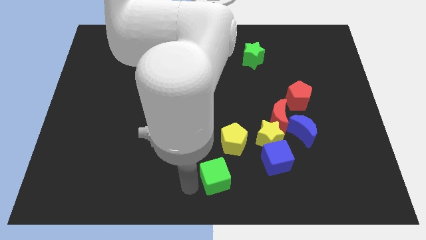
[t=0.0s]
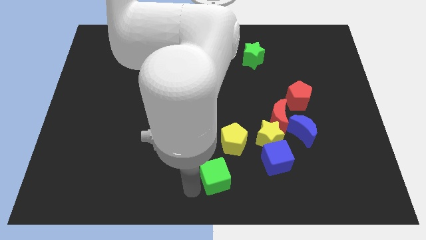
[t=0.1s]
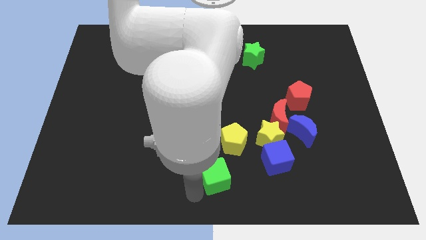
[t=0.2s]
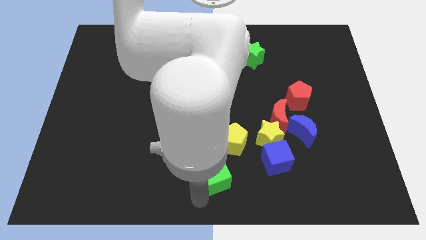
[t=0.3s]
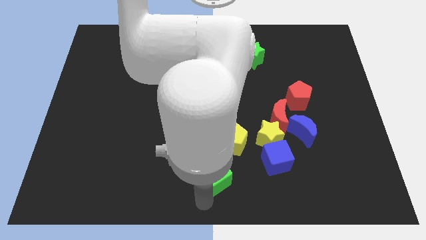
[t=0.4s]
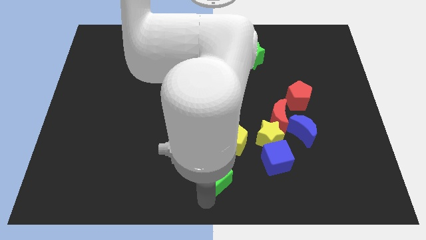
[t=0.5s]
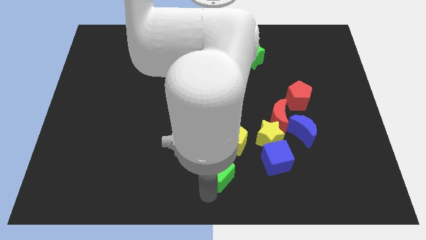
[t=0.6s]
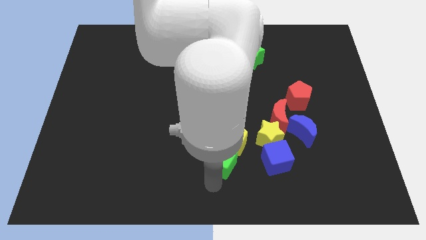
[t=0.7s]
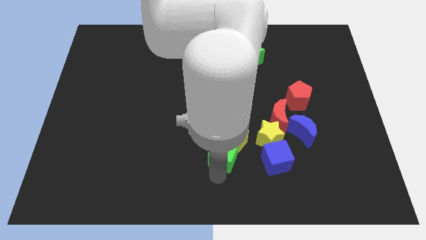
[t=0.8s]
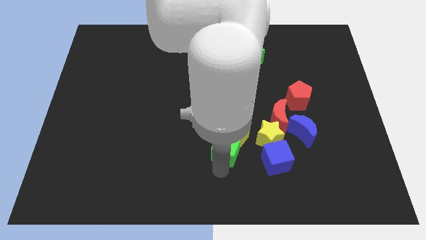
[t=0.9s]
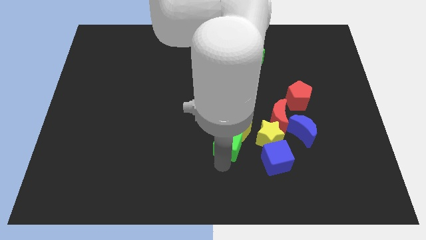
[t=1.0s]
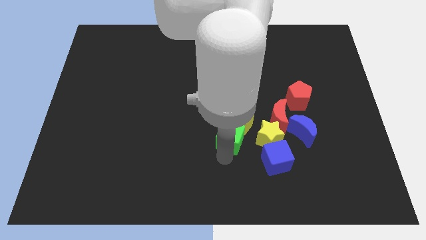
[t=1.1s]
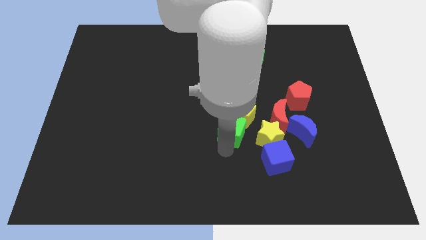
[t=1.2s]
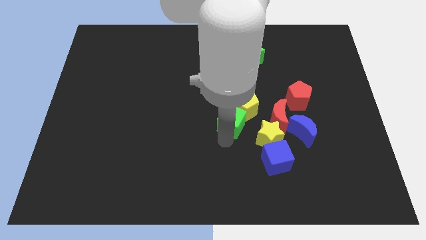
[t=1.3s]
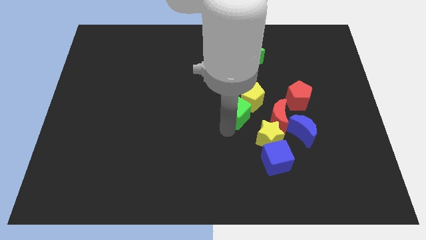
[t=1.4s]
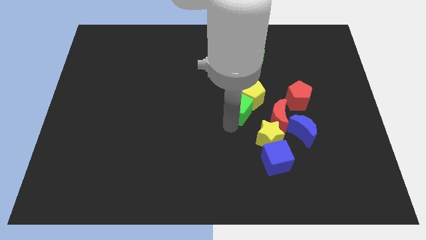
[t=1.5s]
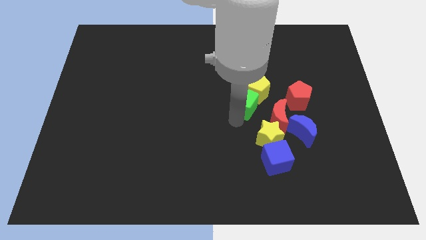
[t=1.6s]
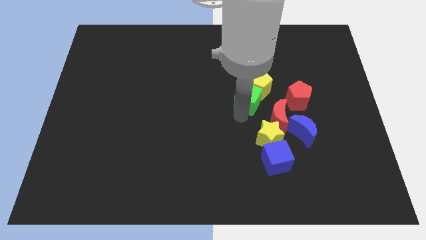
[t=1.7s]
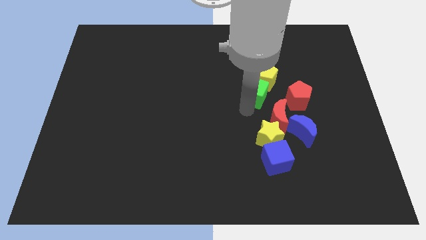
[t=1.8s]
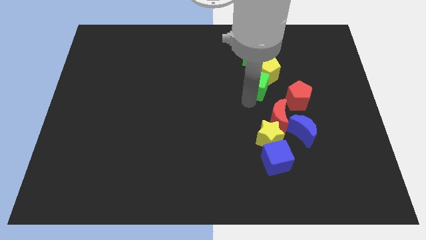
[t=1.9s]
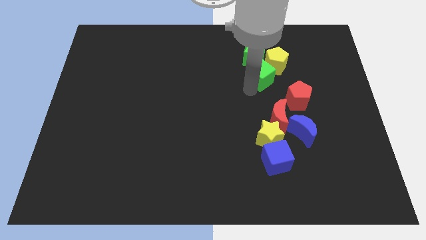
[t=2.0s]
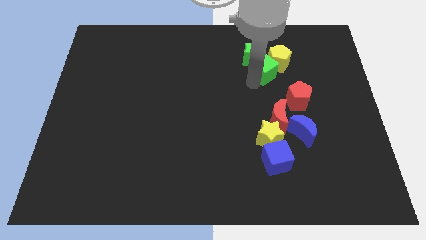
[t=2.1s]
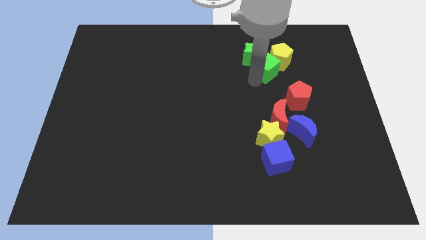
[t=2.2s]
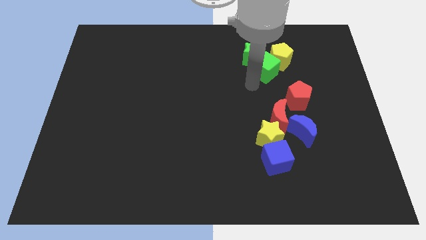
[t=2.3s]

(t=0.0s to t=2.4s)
push the yellow pentagon and green cube towards the green star

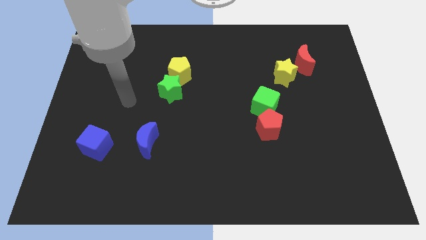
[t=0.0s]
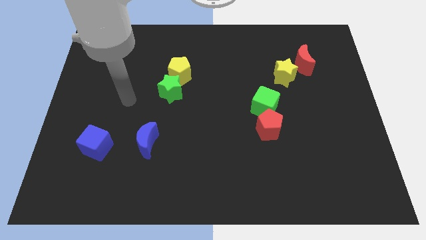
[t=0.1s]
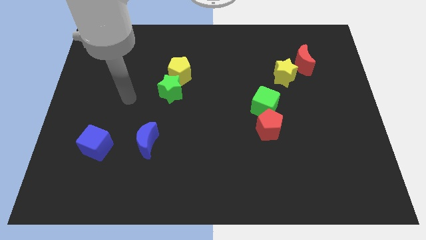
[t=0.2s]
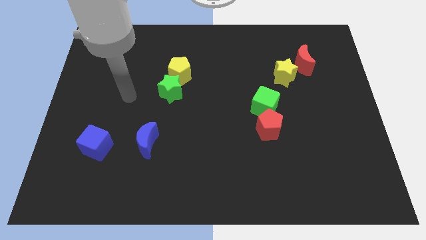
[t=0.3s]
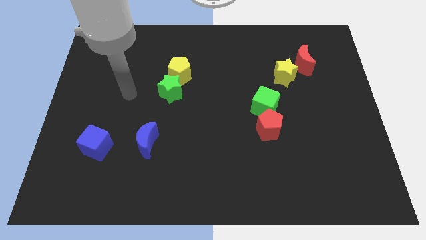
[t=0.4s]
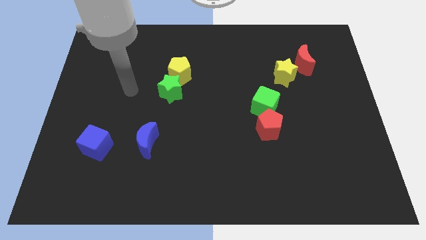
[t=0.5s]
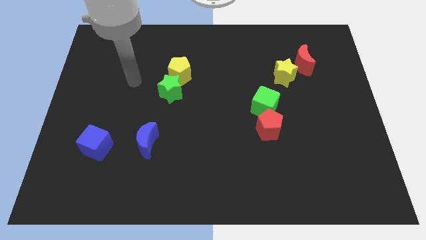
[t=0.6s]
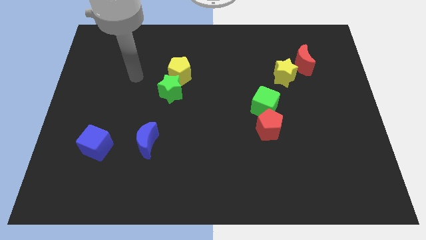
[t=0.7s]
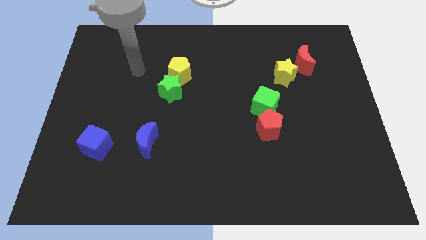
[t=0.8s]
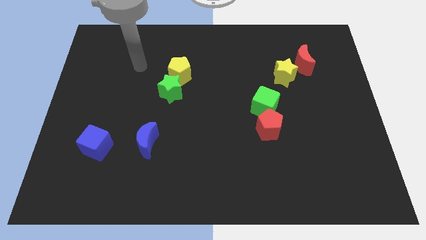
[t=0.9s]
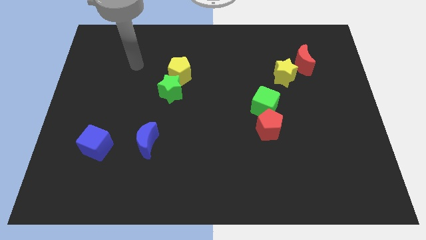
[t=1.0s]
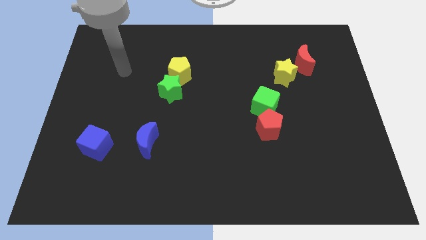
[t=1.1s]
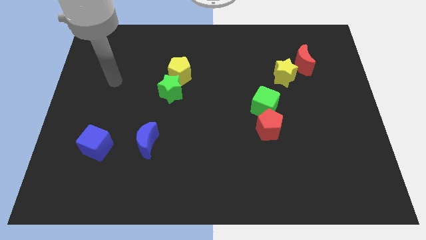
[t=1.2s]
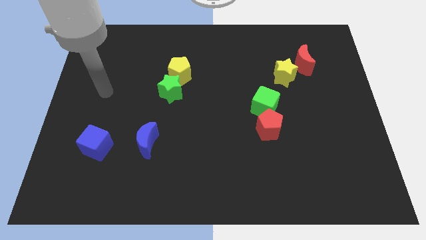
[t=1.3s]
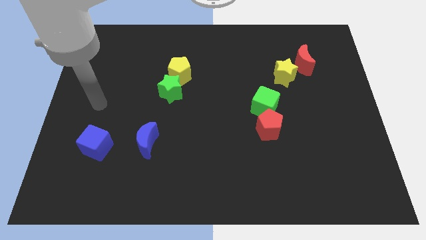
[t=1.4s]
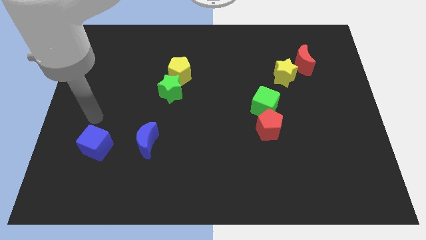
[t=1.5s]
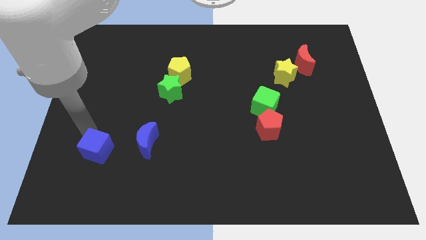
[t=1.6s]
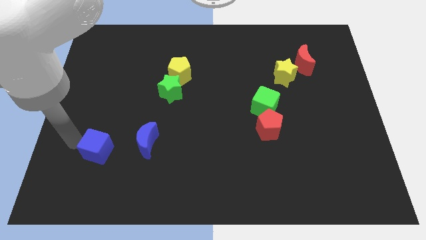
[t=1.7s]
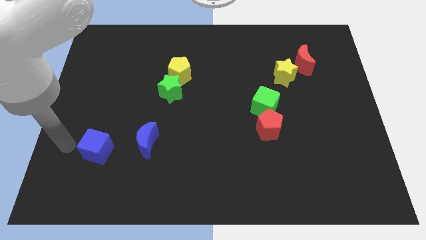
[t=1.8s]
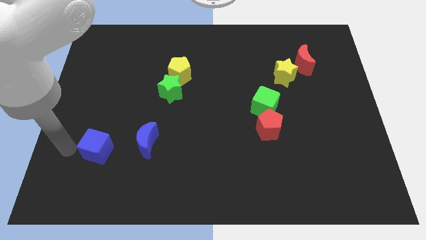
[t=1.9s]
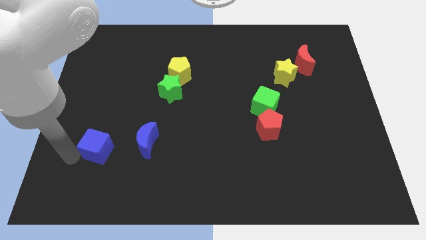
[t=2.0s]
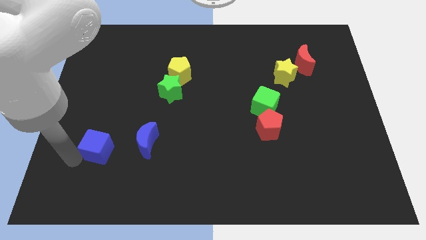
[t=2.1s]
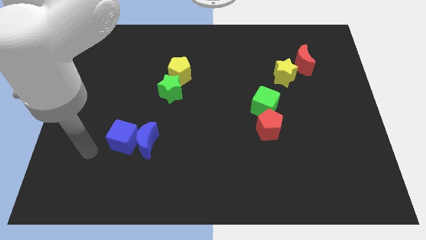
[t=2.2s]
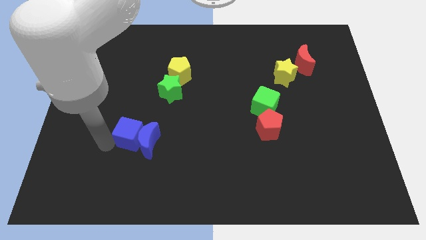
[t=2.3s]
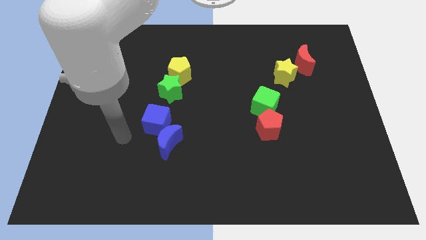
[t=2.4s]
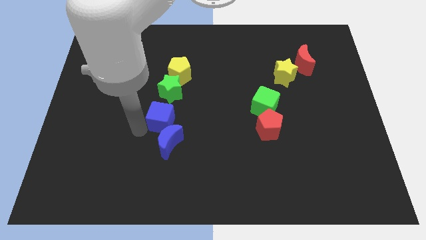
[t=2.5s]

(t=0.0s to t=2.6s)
push the blue square into blue crescent

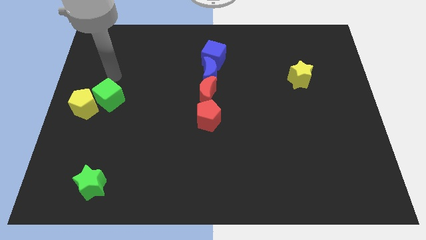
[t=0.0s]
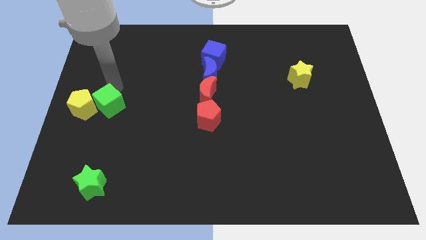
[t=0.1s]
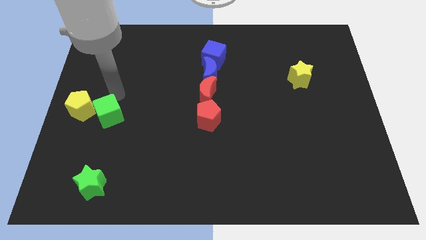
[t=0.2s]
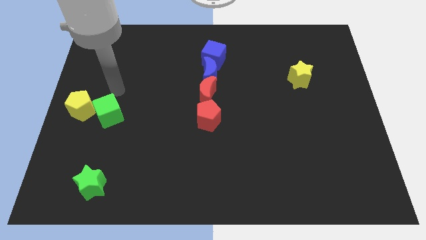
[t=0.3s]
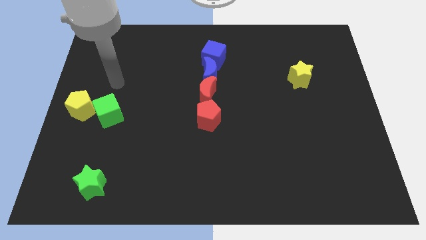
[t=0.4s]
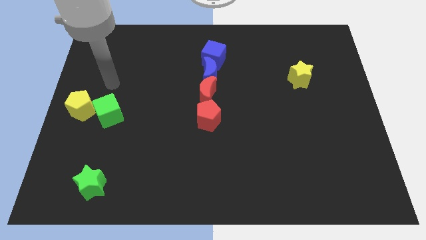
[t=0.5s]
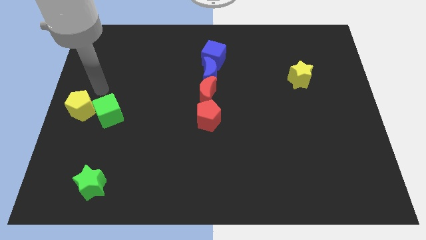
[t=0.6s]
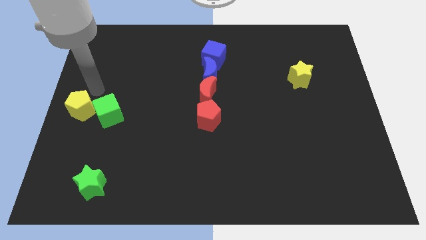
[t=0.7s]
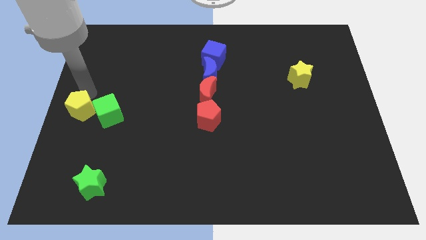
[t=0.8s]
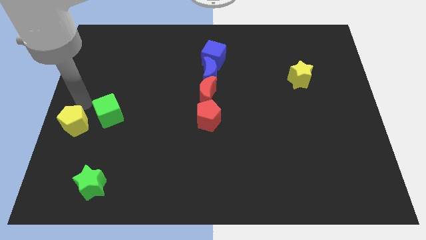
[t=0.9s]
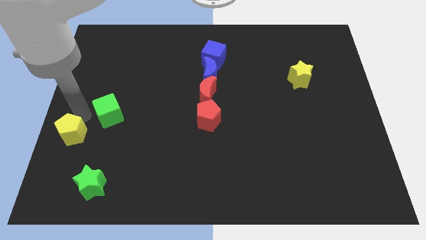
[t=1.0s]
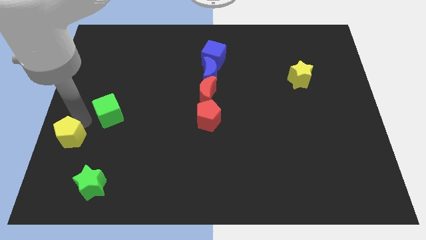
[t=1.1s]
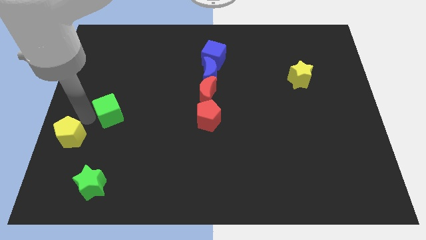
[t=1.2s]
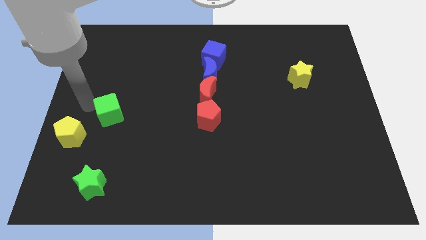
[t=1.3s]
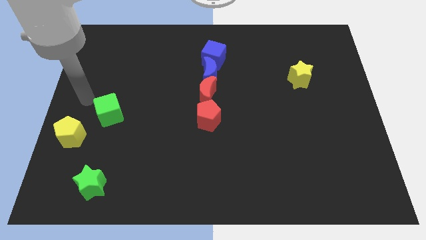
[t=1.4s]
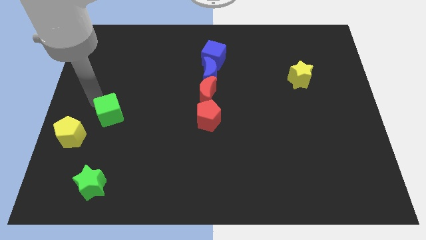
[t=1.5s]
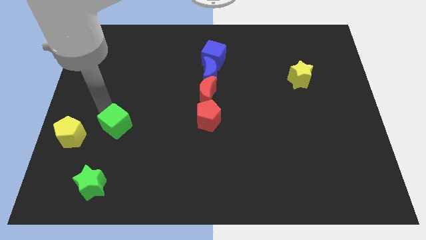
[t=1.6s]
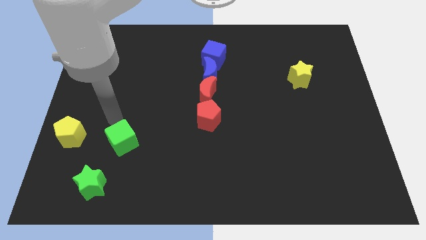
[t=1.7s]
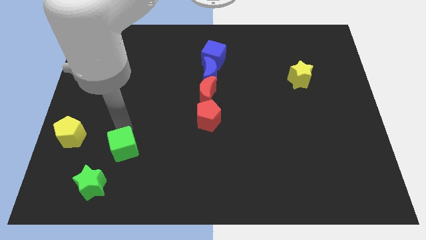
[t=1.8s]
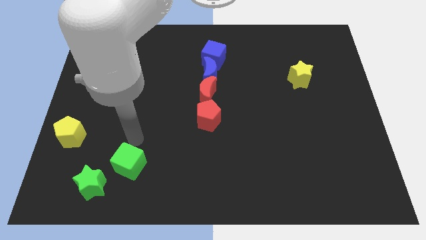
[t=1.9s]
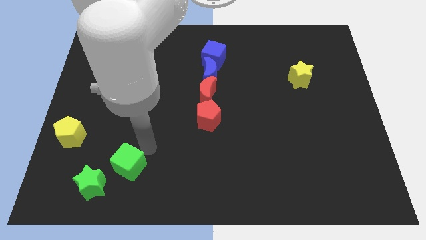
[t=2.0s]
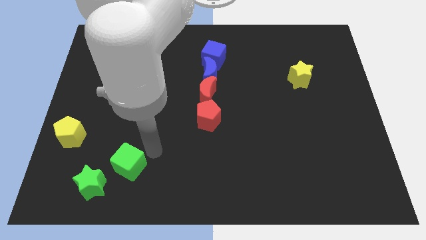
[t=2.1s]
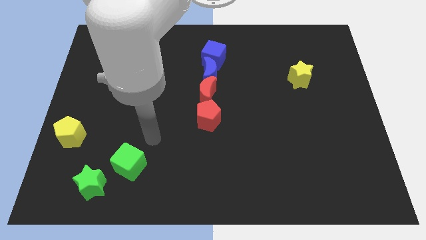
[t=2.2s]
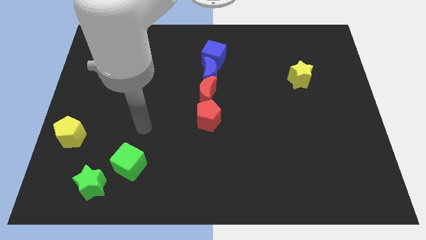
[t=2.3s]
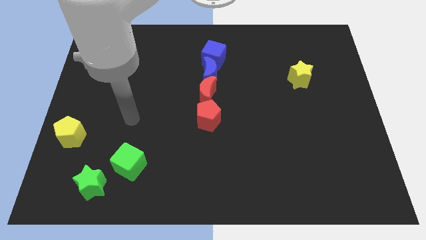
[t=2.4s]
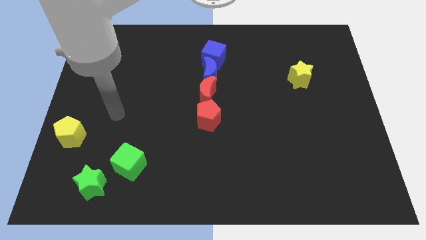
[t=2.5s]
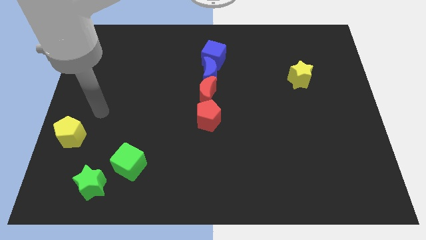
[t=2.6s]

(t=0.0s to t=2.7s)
push green cube towards green star

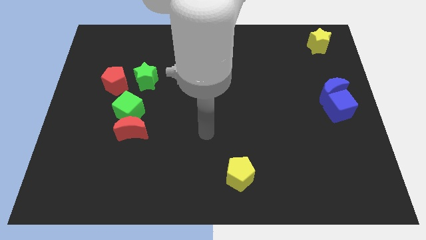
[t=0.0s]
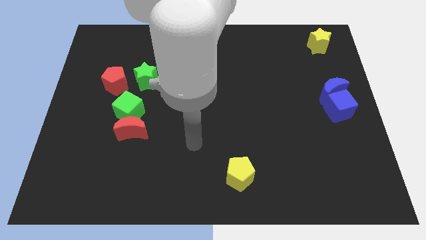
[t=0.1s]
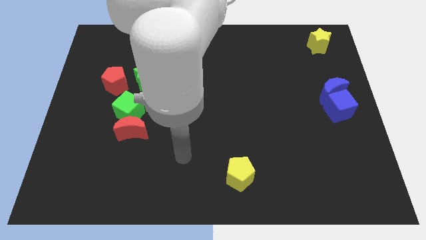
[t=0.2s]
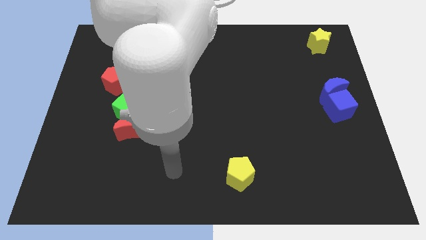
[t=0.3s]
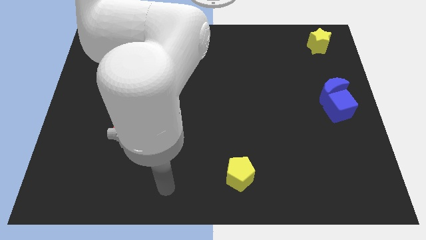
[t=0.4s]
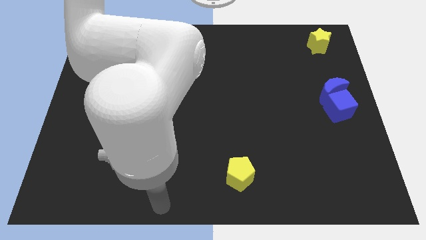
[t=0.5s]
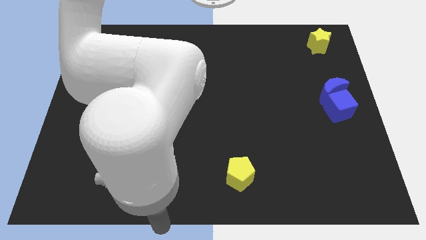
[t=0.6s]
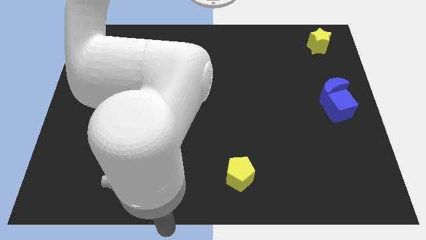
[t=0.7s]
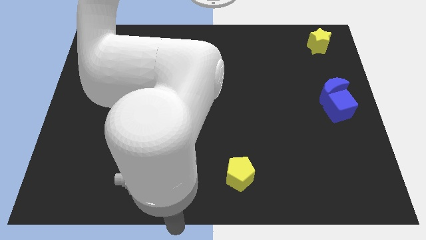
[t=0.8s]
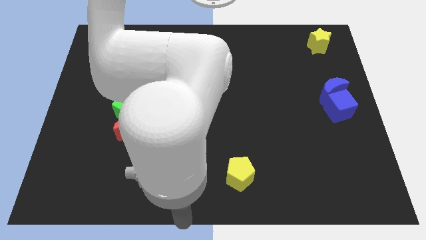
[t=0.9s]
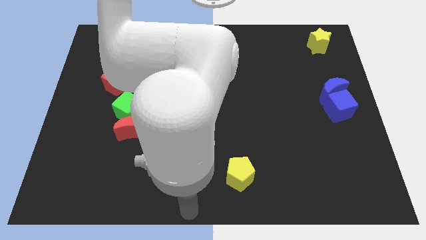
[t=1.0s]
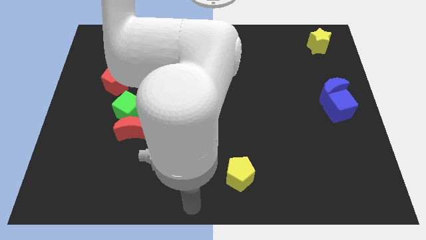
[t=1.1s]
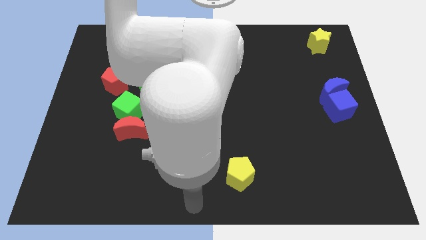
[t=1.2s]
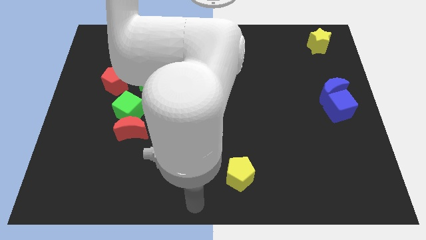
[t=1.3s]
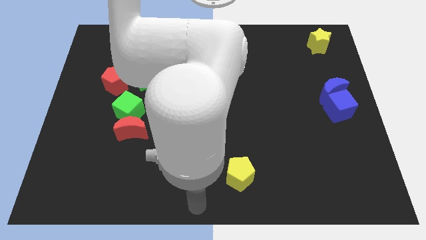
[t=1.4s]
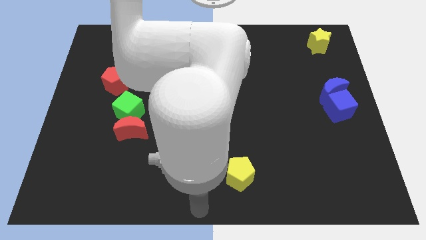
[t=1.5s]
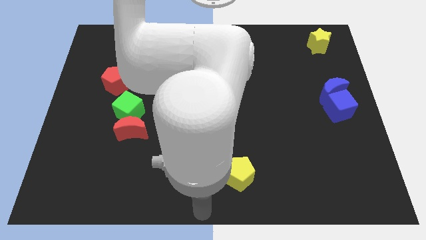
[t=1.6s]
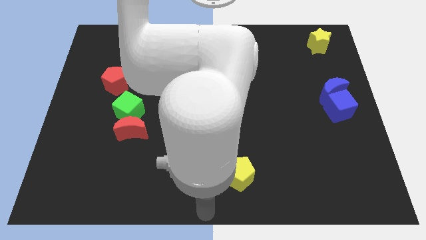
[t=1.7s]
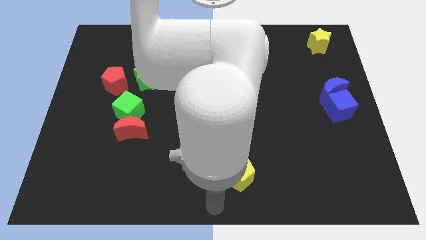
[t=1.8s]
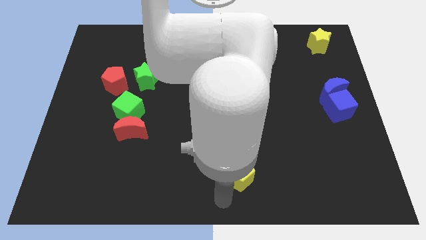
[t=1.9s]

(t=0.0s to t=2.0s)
move near the bottom center of the board
